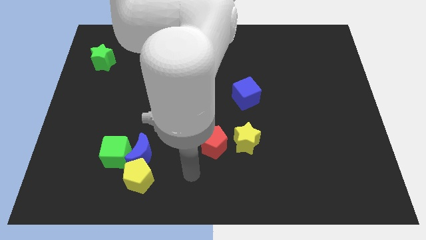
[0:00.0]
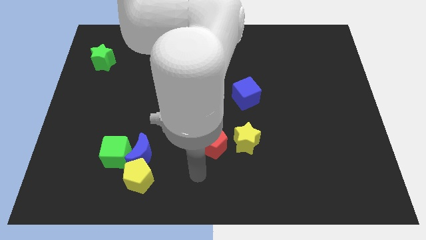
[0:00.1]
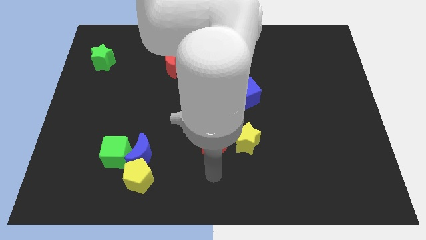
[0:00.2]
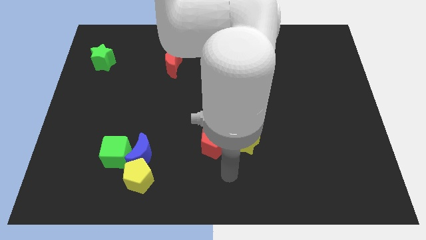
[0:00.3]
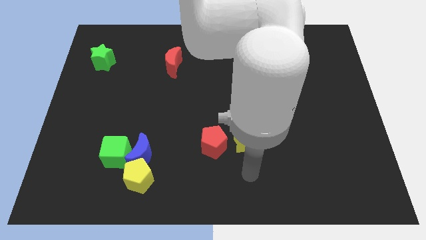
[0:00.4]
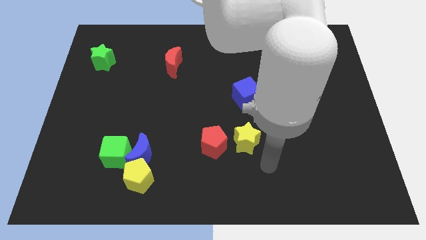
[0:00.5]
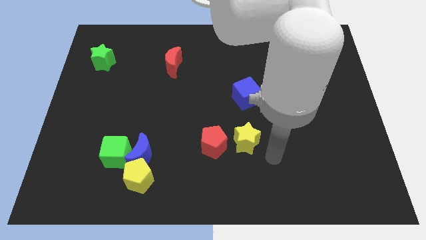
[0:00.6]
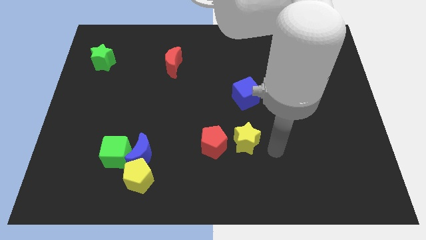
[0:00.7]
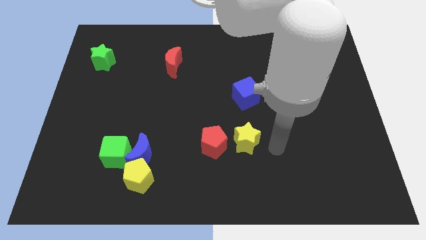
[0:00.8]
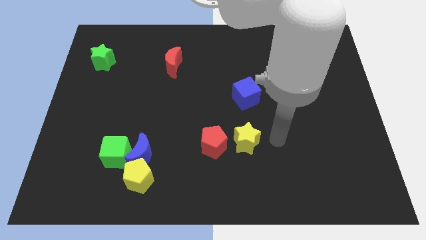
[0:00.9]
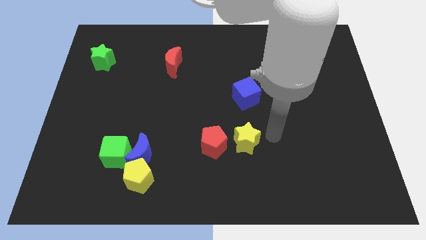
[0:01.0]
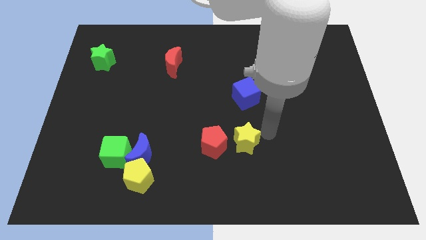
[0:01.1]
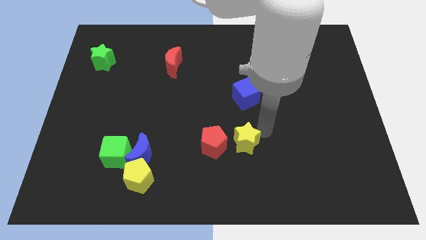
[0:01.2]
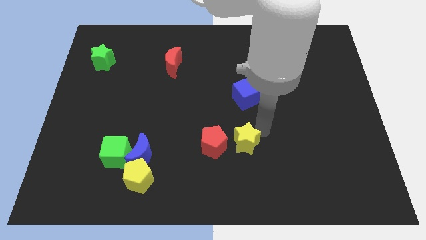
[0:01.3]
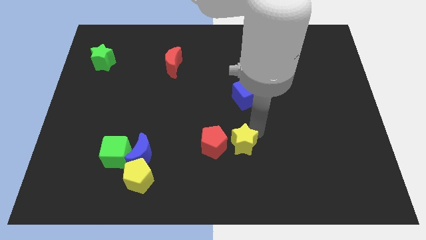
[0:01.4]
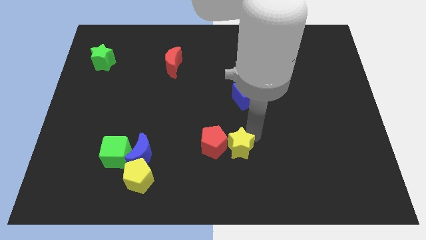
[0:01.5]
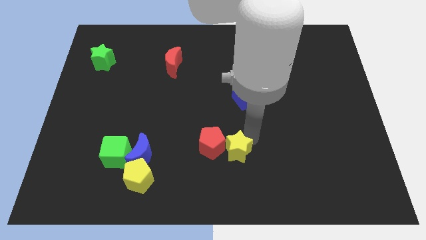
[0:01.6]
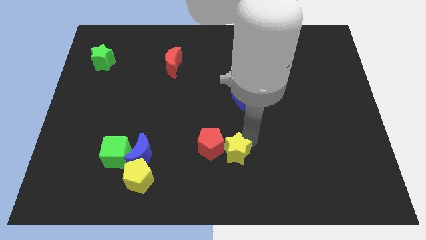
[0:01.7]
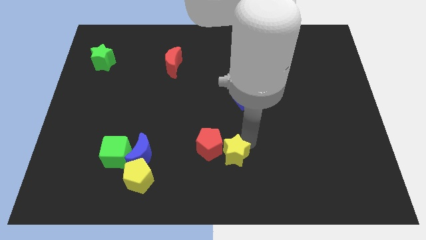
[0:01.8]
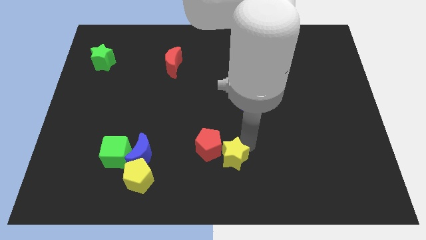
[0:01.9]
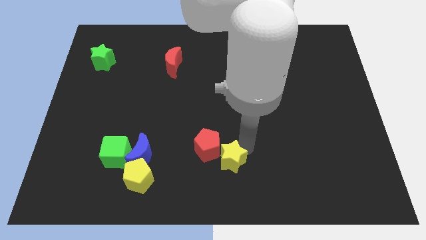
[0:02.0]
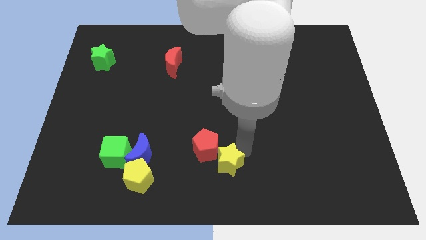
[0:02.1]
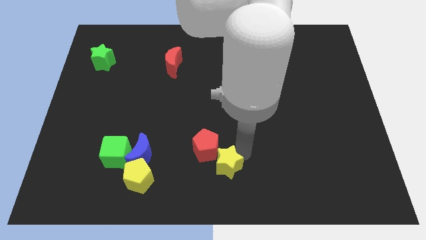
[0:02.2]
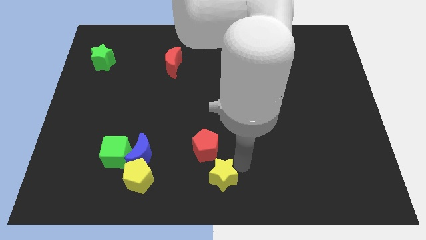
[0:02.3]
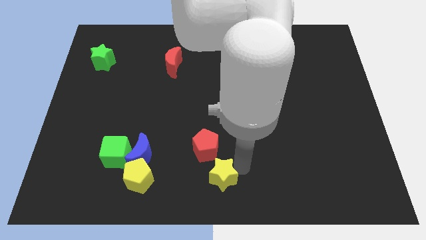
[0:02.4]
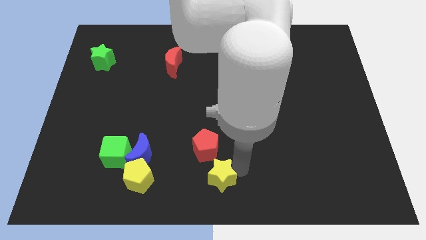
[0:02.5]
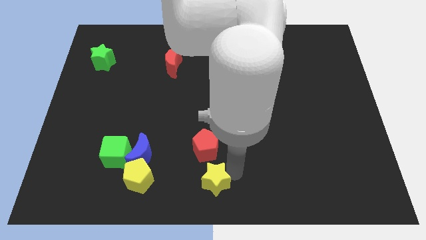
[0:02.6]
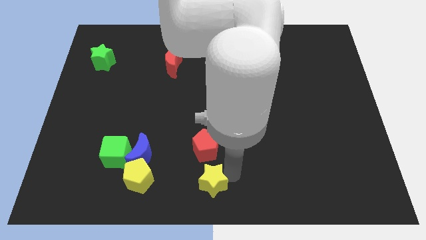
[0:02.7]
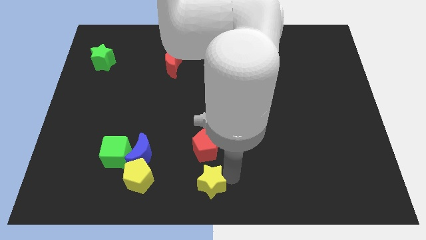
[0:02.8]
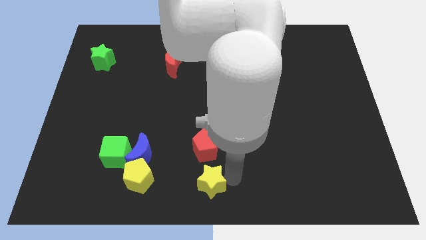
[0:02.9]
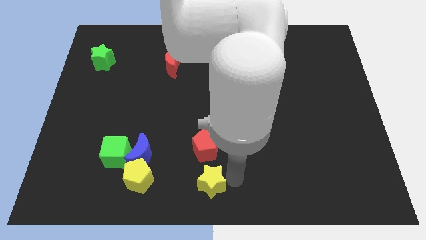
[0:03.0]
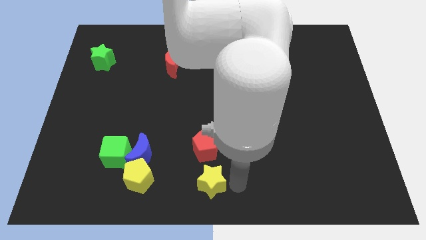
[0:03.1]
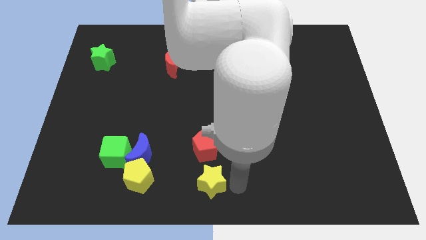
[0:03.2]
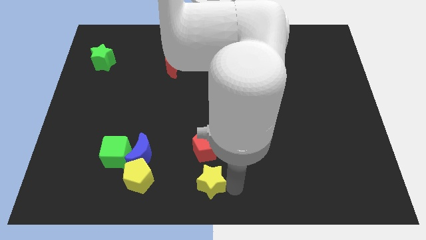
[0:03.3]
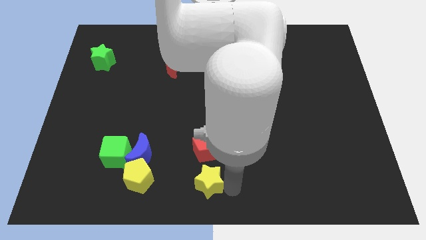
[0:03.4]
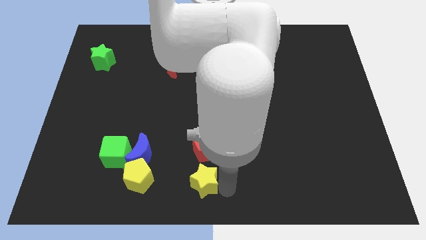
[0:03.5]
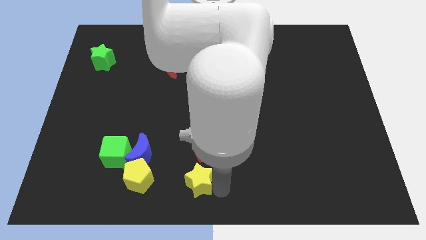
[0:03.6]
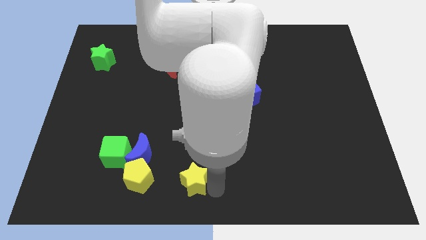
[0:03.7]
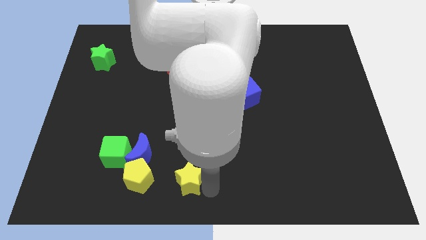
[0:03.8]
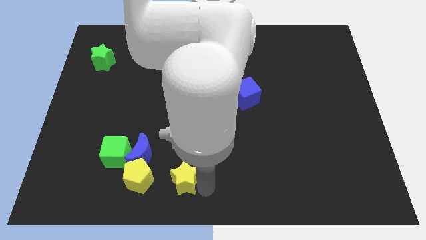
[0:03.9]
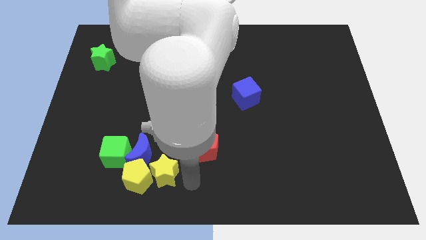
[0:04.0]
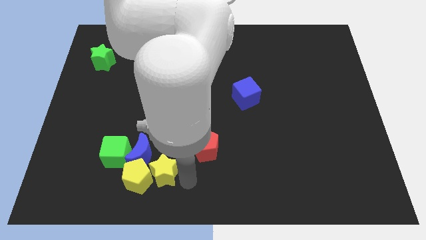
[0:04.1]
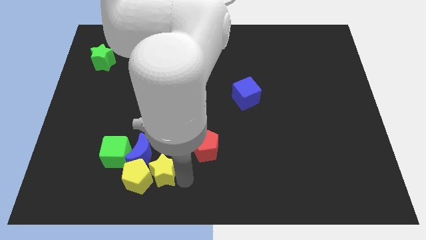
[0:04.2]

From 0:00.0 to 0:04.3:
move the yellow star close to the yellow pentagon

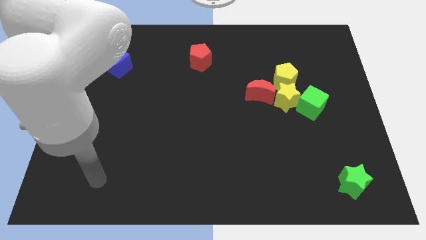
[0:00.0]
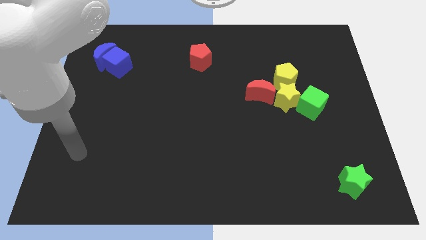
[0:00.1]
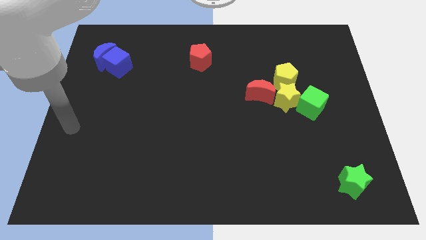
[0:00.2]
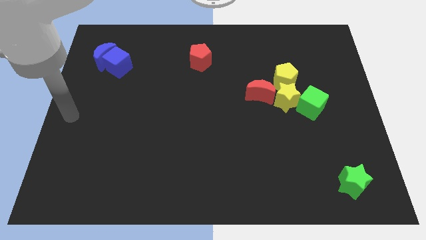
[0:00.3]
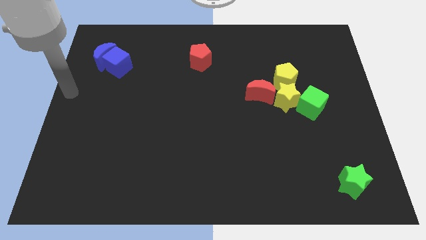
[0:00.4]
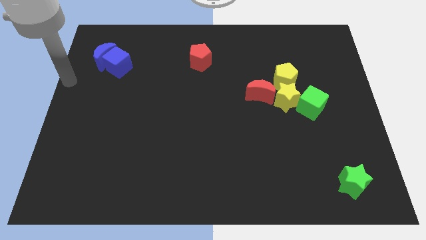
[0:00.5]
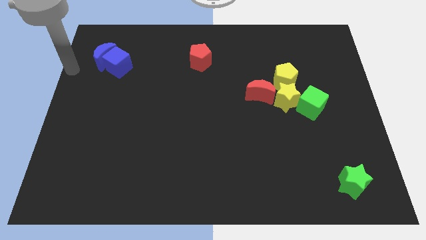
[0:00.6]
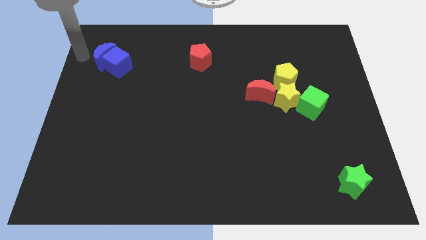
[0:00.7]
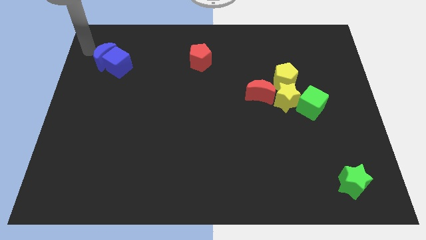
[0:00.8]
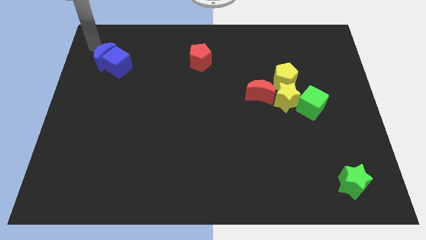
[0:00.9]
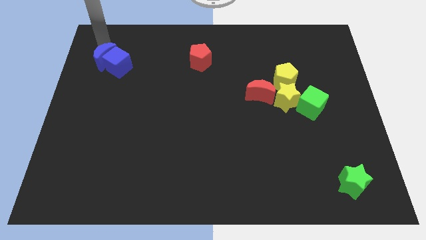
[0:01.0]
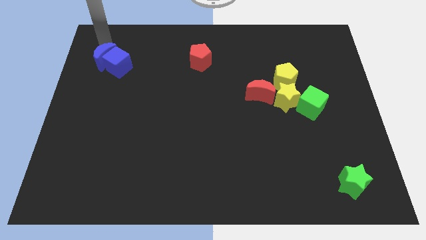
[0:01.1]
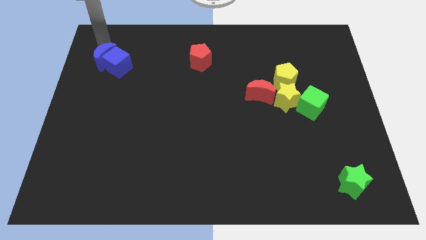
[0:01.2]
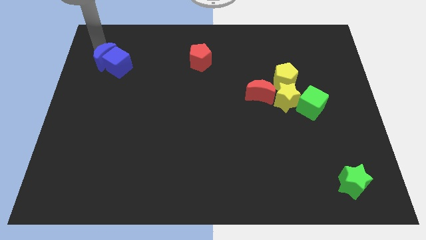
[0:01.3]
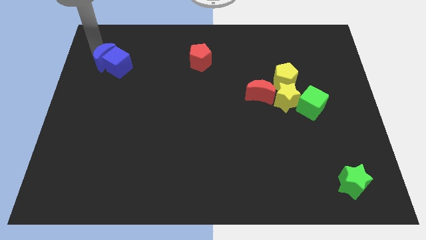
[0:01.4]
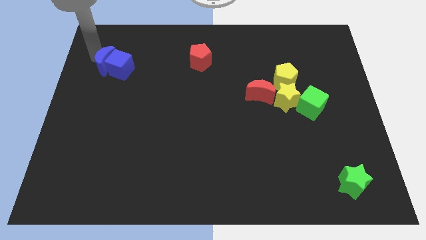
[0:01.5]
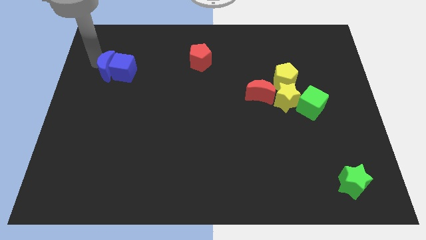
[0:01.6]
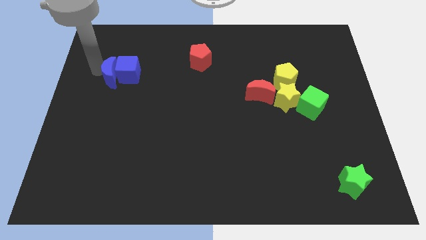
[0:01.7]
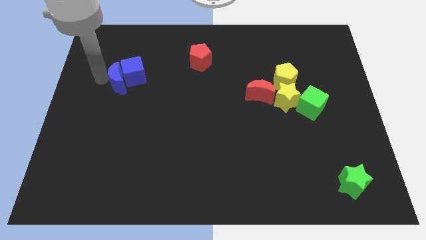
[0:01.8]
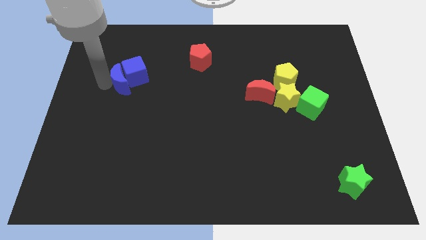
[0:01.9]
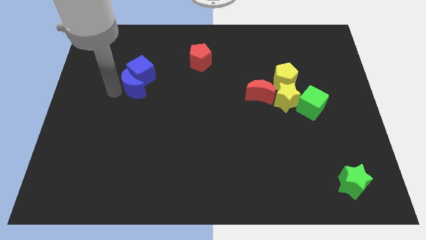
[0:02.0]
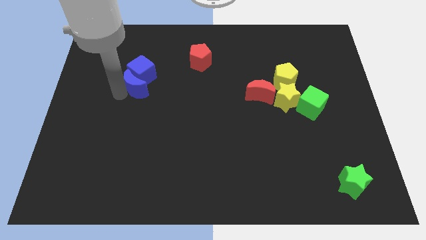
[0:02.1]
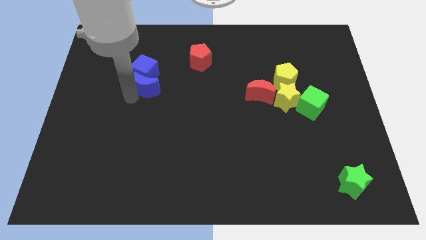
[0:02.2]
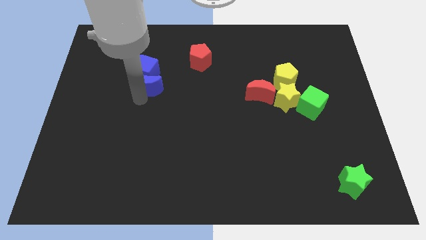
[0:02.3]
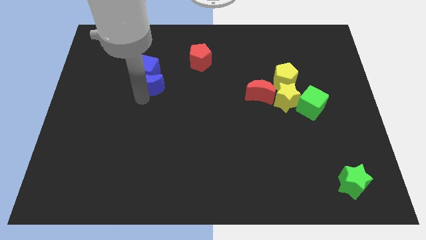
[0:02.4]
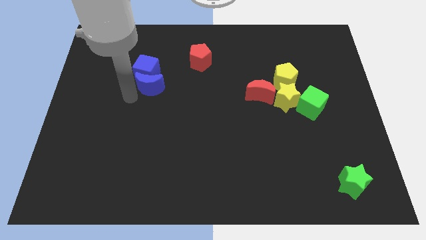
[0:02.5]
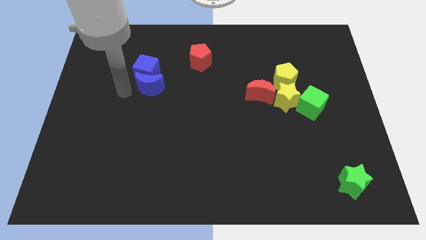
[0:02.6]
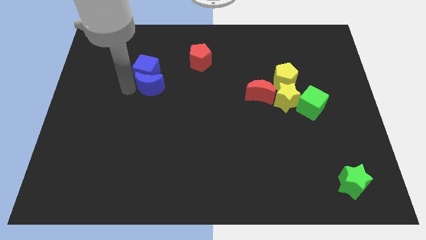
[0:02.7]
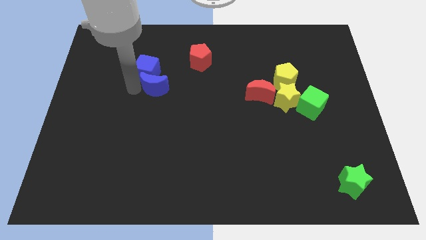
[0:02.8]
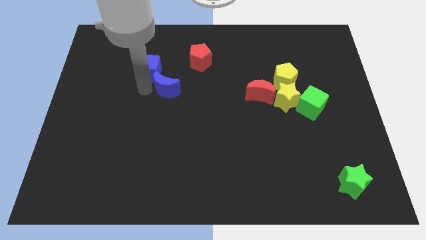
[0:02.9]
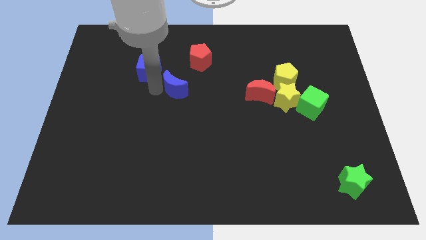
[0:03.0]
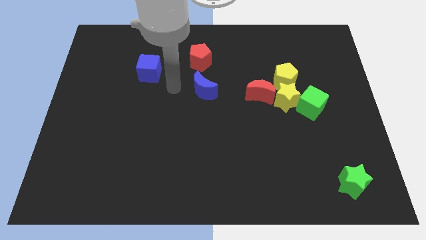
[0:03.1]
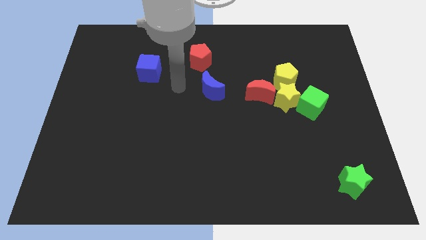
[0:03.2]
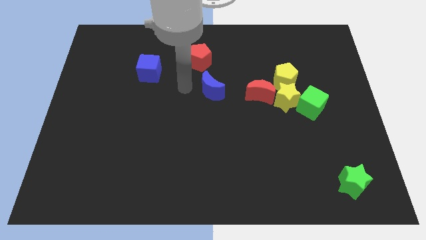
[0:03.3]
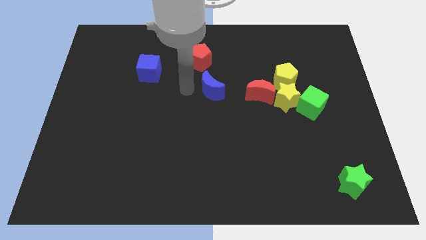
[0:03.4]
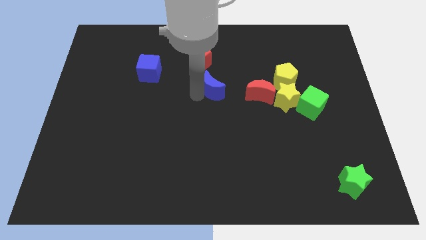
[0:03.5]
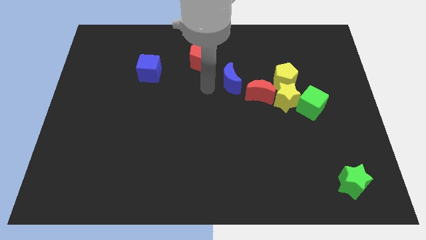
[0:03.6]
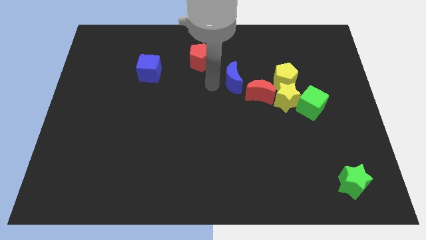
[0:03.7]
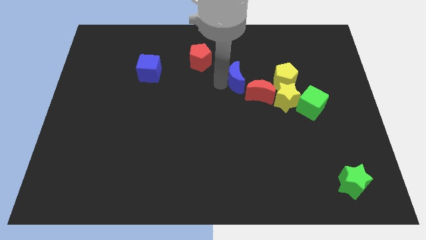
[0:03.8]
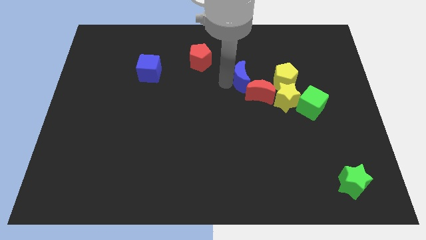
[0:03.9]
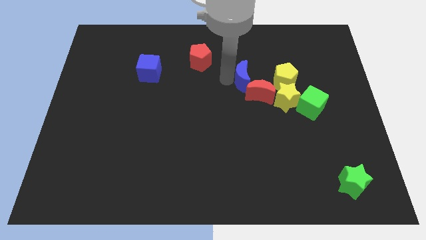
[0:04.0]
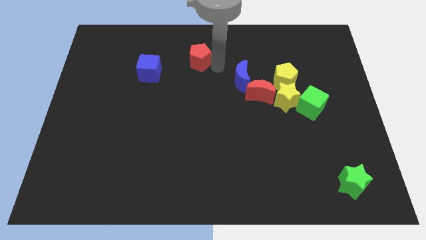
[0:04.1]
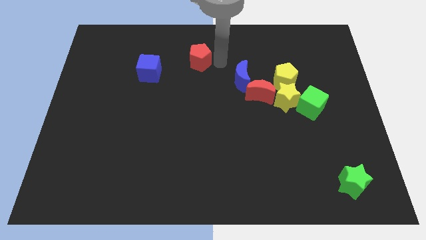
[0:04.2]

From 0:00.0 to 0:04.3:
put the blue moon to the red moon

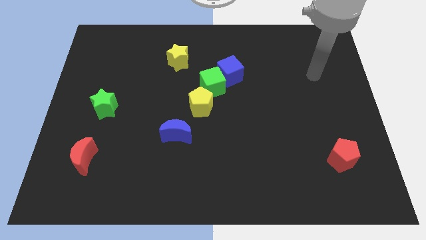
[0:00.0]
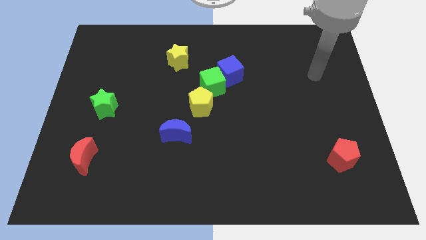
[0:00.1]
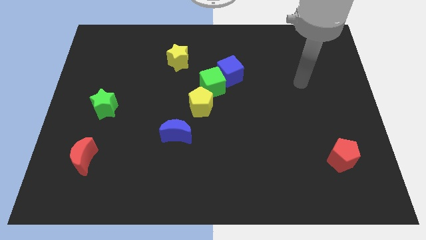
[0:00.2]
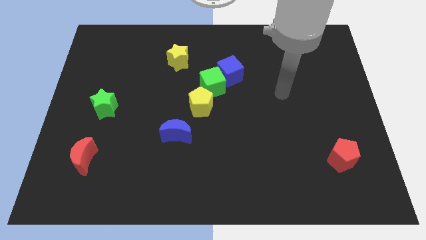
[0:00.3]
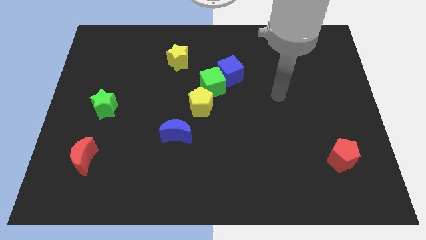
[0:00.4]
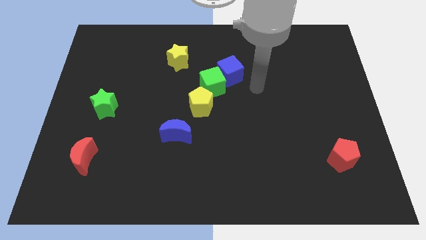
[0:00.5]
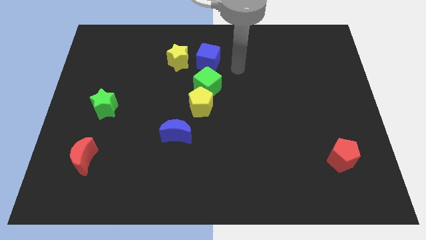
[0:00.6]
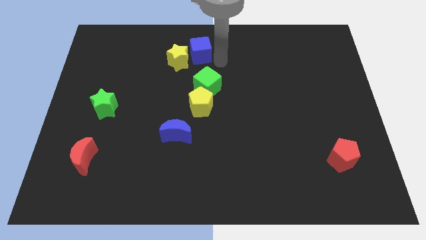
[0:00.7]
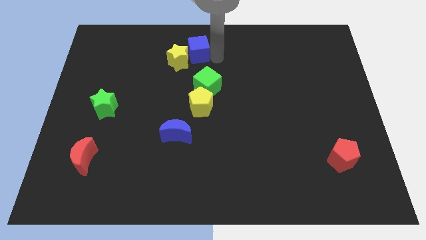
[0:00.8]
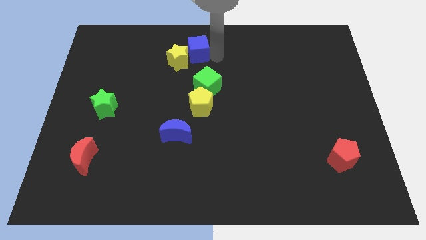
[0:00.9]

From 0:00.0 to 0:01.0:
move the blue cube close to the yellow star
